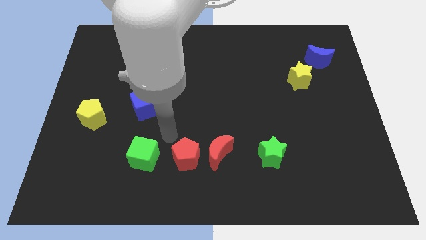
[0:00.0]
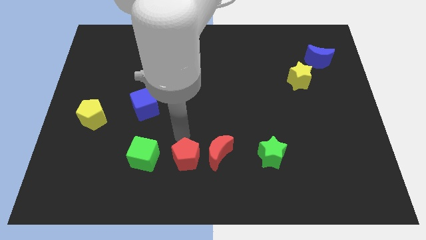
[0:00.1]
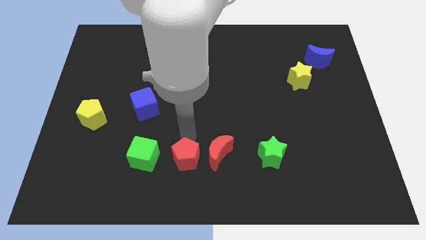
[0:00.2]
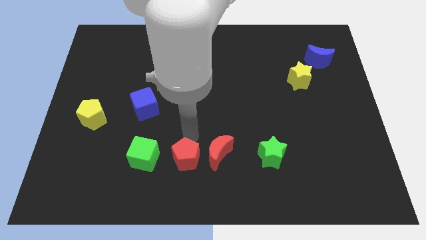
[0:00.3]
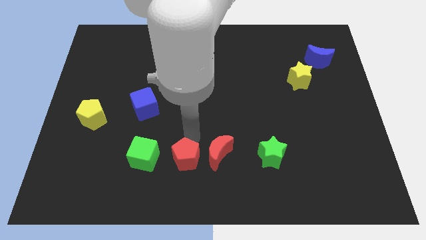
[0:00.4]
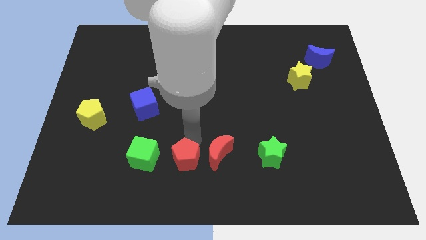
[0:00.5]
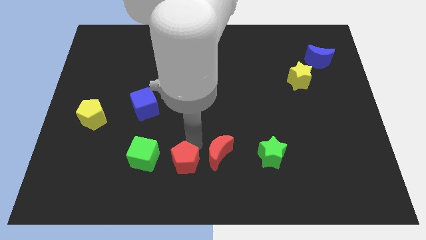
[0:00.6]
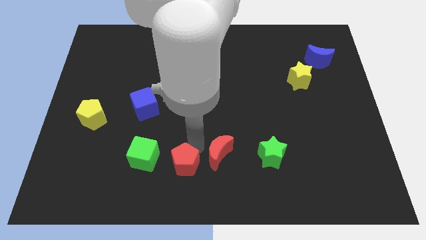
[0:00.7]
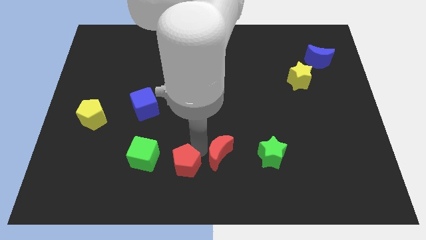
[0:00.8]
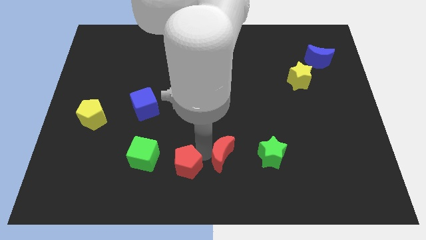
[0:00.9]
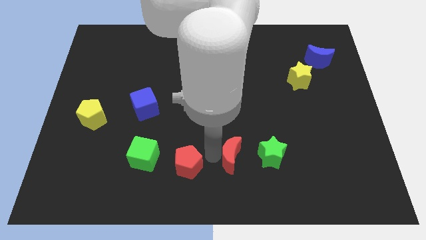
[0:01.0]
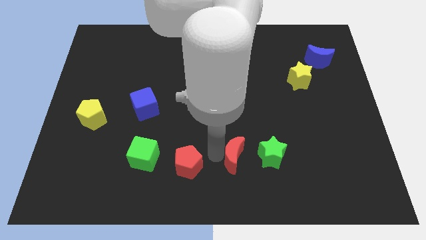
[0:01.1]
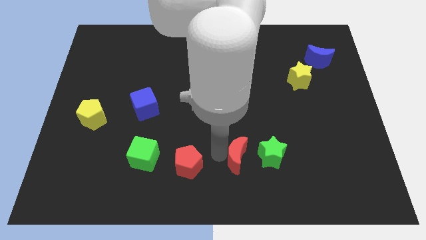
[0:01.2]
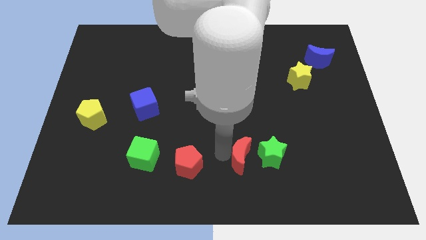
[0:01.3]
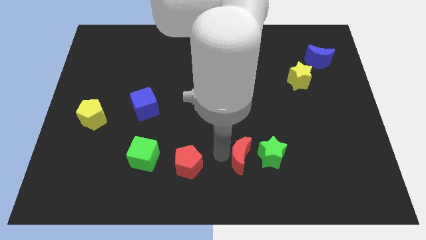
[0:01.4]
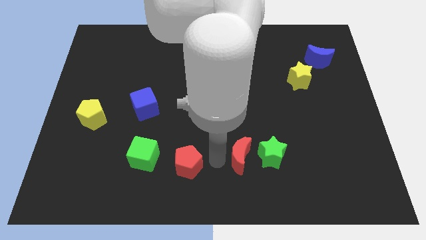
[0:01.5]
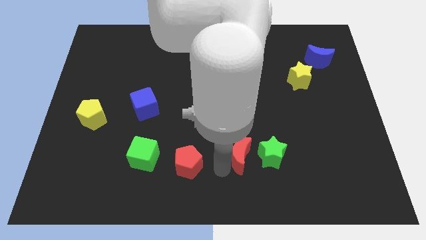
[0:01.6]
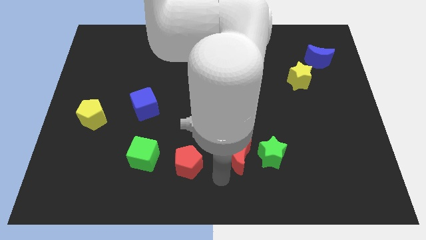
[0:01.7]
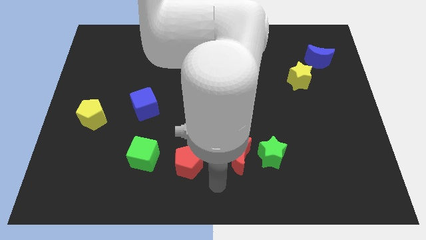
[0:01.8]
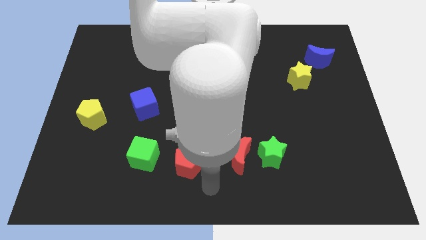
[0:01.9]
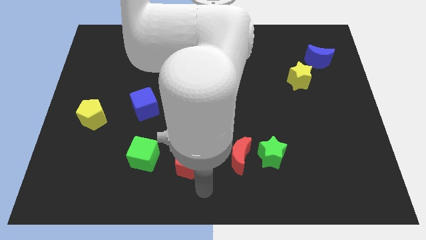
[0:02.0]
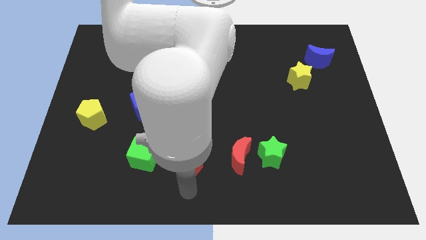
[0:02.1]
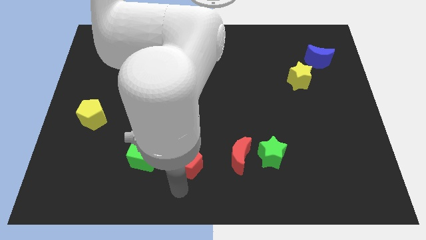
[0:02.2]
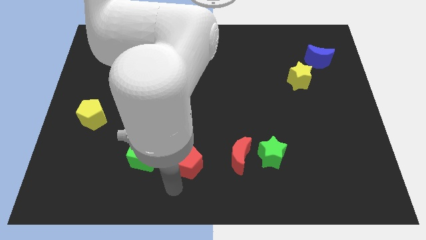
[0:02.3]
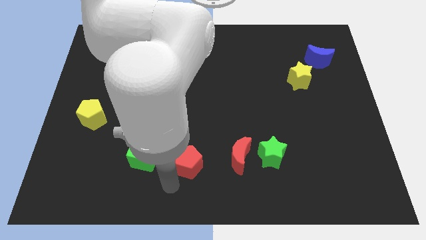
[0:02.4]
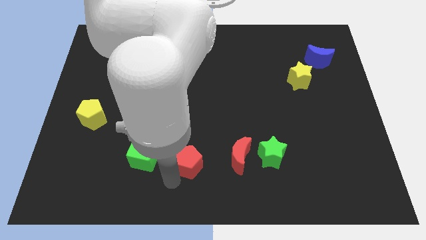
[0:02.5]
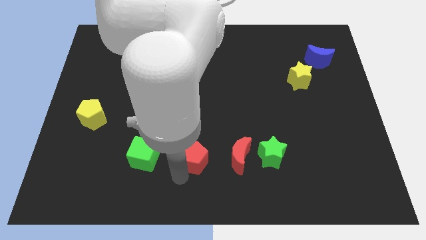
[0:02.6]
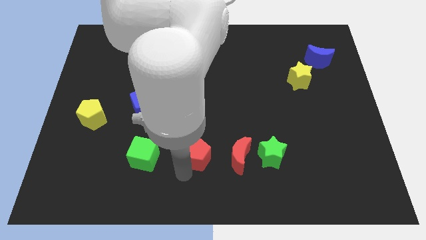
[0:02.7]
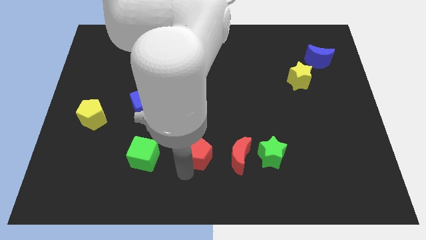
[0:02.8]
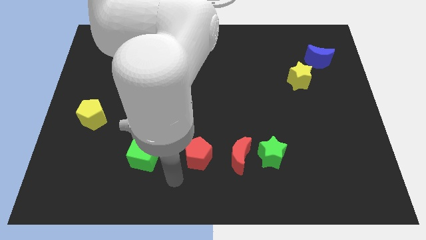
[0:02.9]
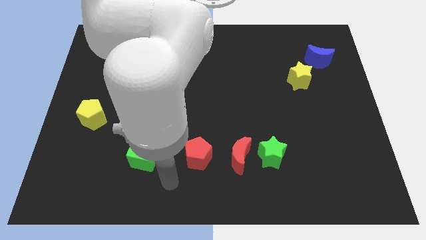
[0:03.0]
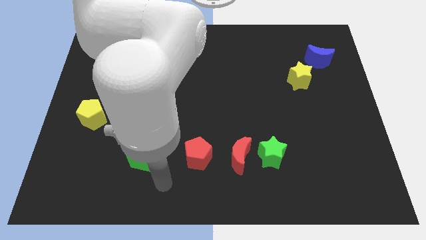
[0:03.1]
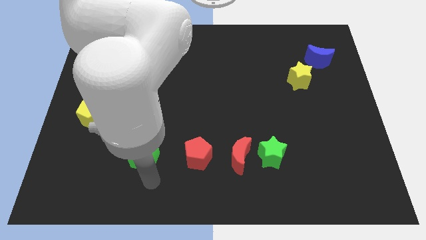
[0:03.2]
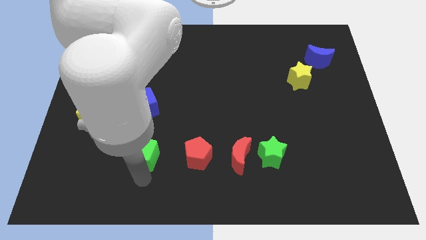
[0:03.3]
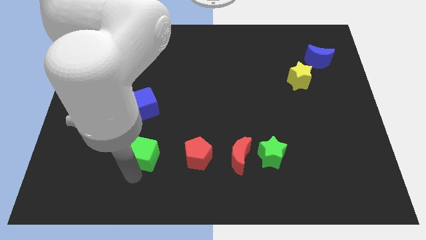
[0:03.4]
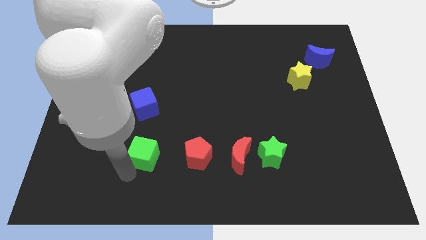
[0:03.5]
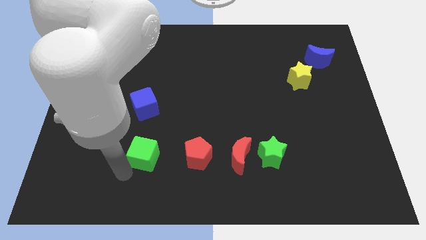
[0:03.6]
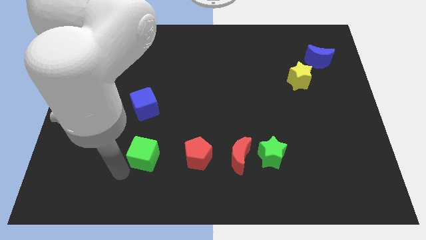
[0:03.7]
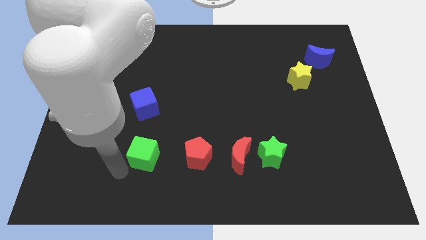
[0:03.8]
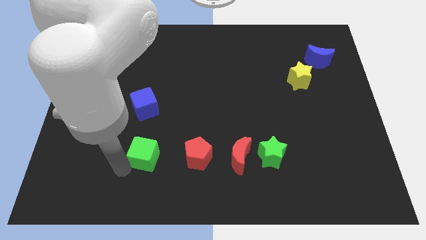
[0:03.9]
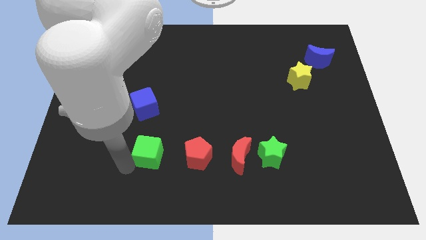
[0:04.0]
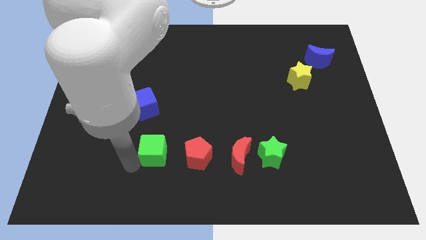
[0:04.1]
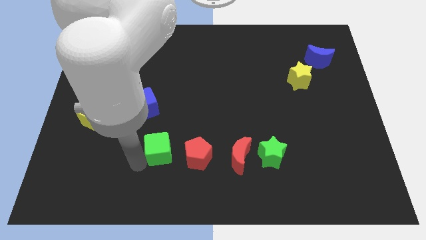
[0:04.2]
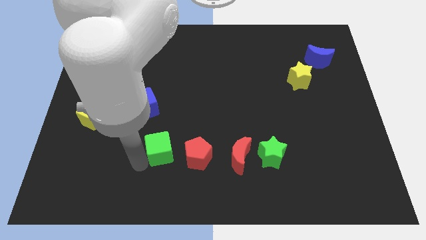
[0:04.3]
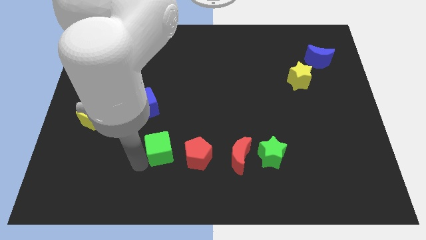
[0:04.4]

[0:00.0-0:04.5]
adjust the red moon and green cube into the horizontal line

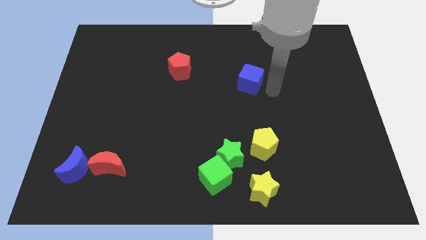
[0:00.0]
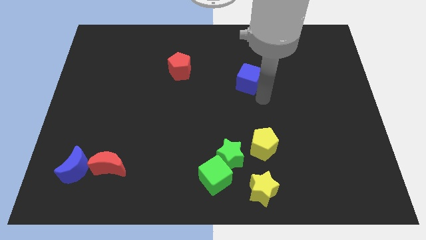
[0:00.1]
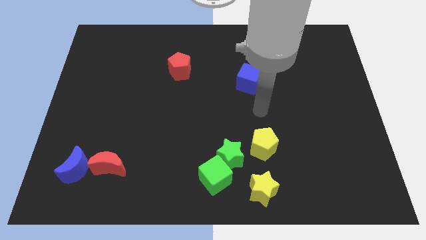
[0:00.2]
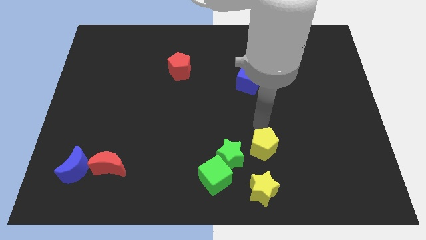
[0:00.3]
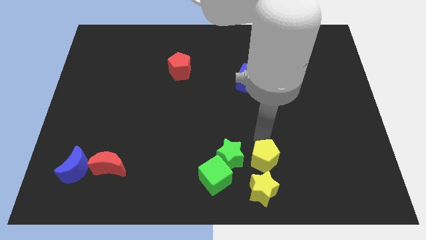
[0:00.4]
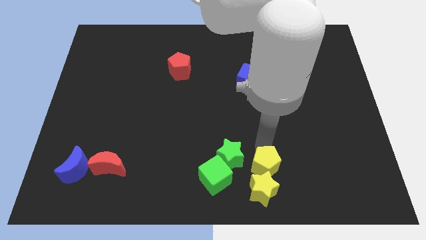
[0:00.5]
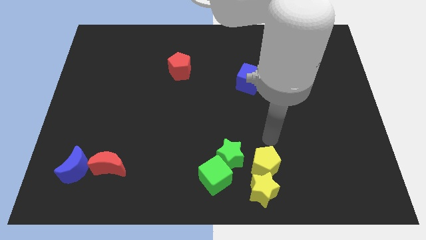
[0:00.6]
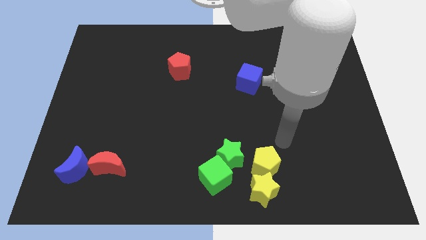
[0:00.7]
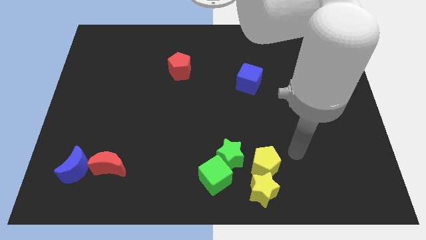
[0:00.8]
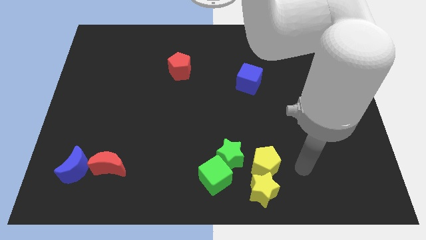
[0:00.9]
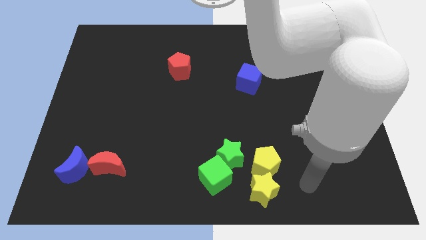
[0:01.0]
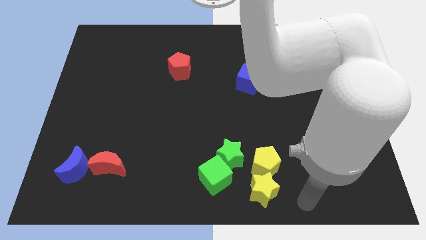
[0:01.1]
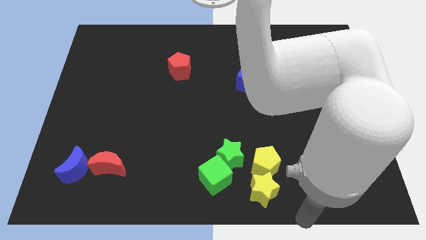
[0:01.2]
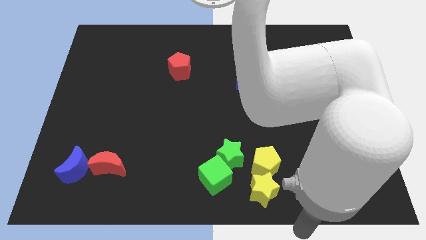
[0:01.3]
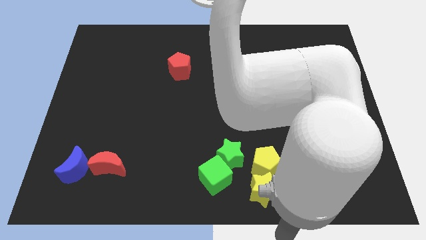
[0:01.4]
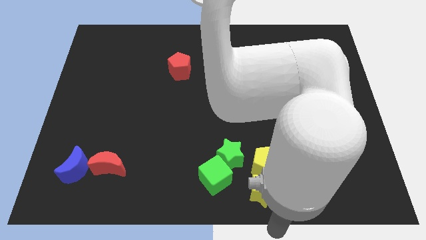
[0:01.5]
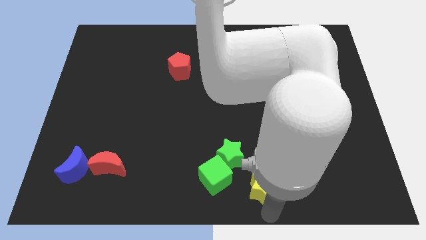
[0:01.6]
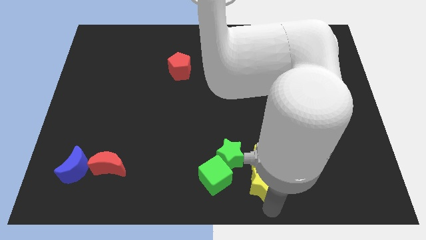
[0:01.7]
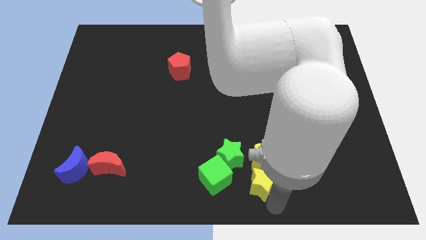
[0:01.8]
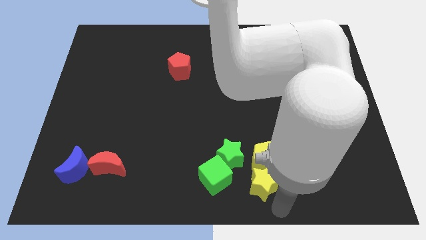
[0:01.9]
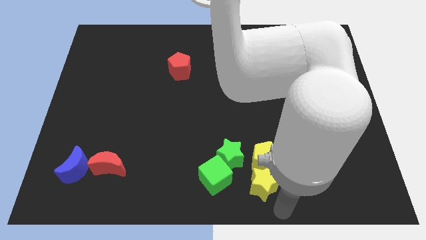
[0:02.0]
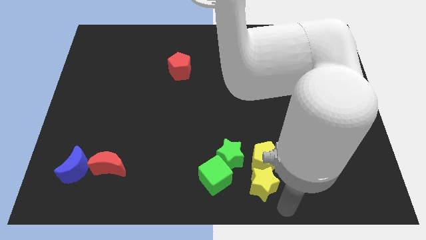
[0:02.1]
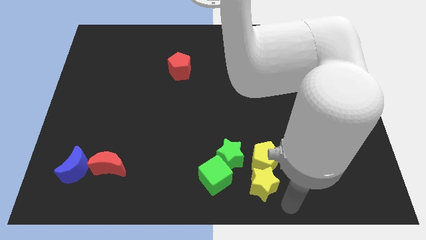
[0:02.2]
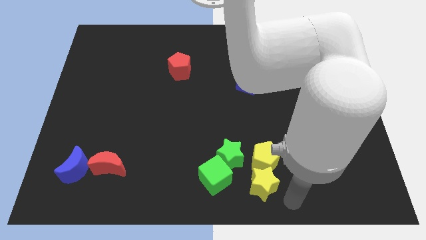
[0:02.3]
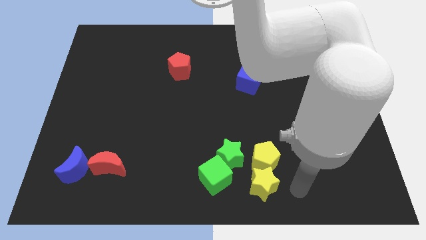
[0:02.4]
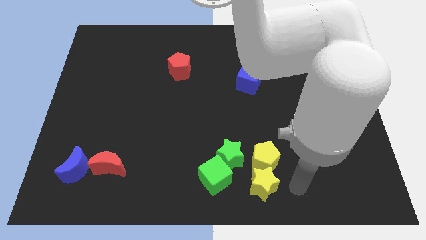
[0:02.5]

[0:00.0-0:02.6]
adjust the yellow blocks at the bottom

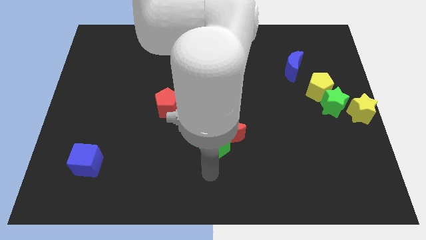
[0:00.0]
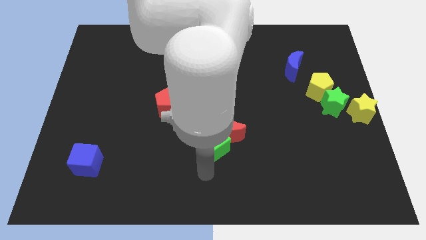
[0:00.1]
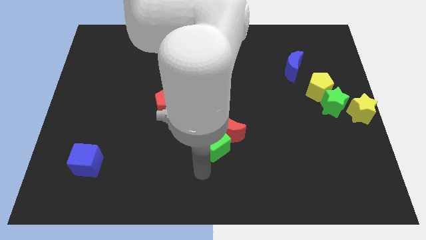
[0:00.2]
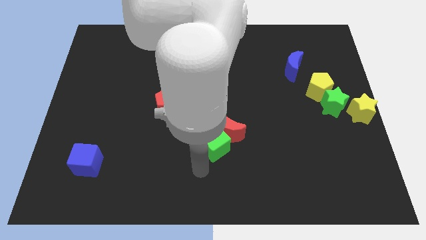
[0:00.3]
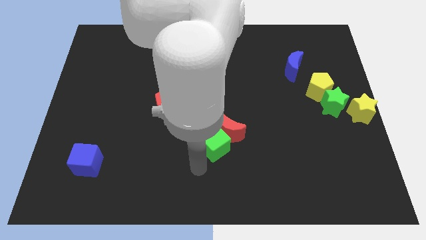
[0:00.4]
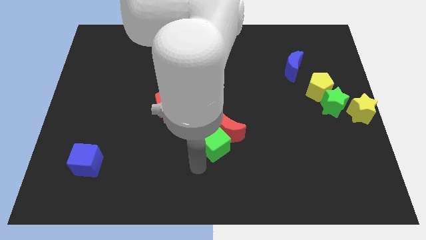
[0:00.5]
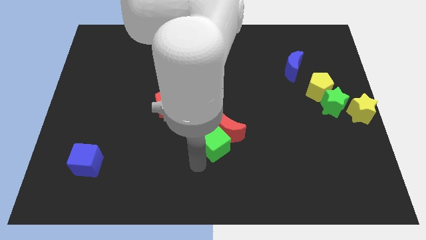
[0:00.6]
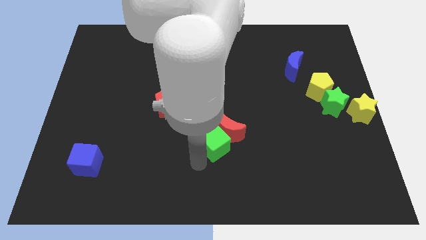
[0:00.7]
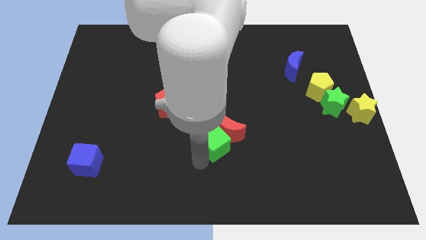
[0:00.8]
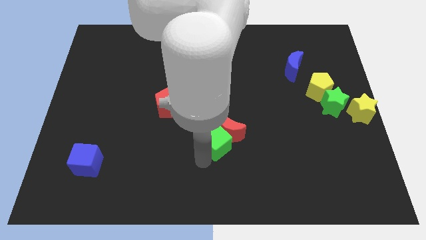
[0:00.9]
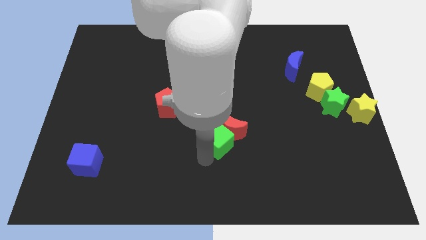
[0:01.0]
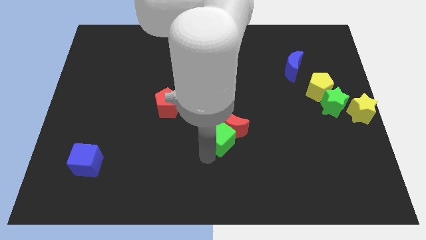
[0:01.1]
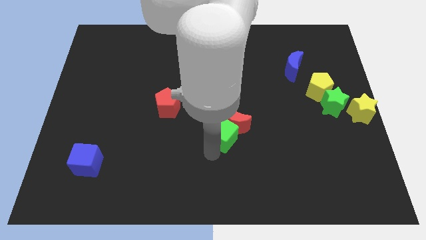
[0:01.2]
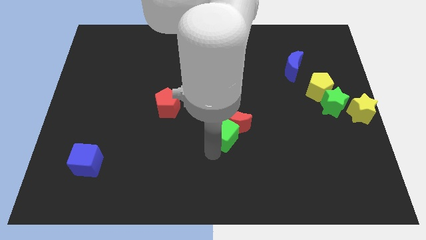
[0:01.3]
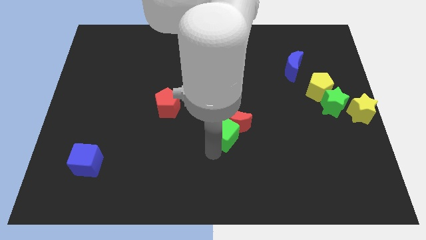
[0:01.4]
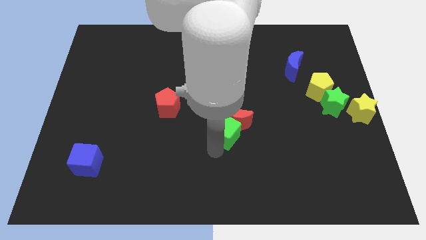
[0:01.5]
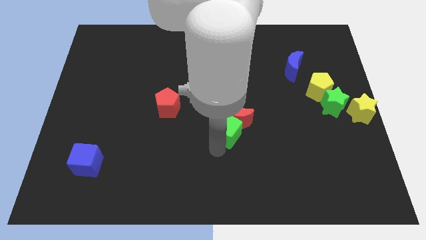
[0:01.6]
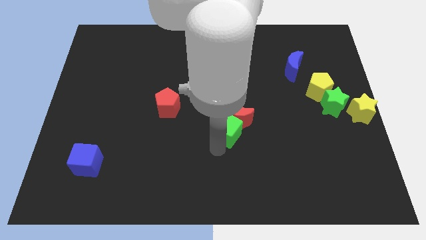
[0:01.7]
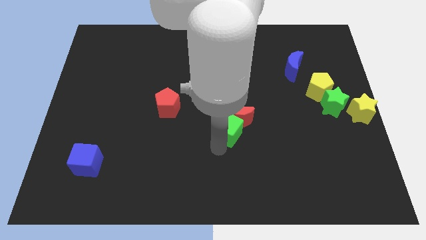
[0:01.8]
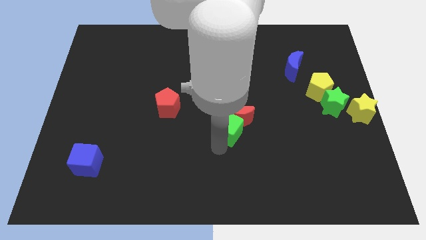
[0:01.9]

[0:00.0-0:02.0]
drag the green cube and the red moon towards the center right
